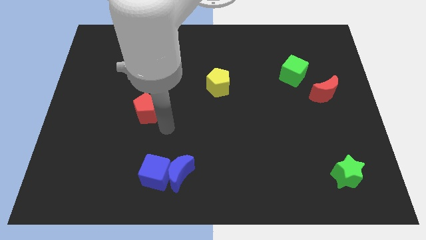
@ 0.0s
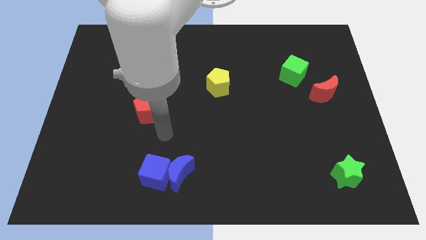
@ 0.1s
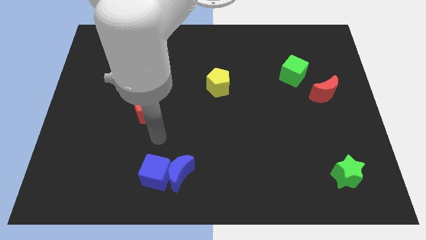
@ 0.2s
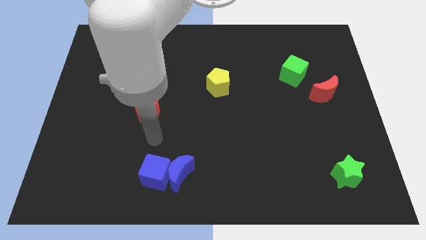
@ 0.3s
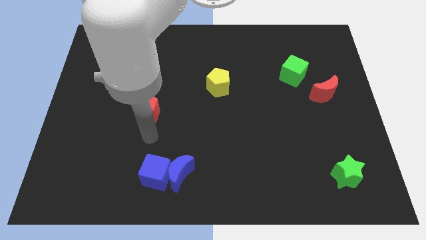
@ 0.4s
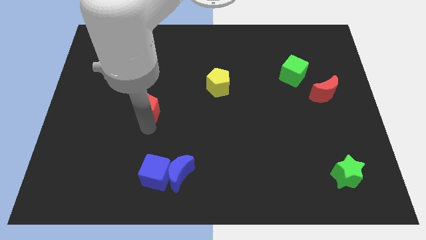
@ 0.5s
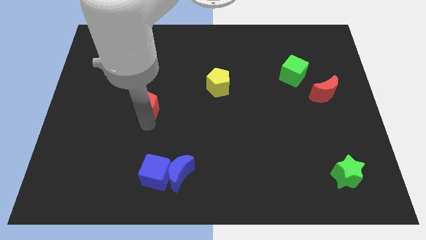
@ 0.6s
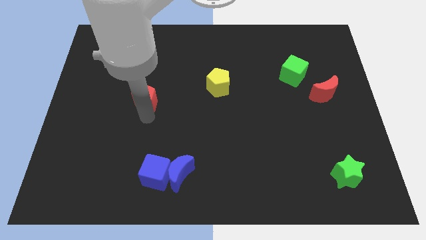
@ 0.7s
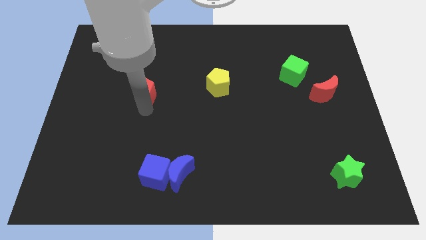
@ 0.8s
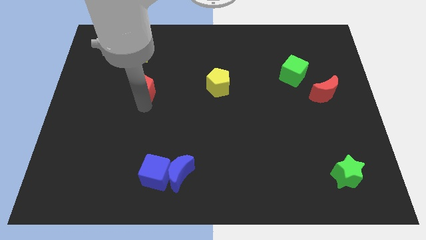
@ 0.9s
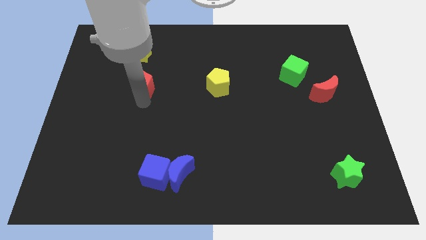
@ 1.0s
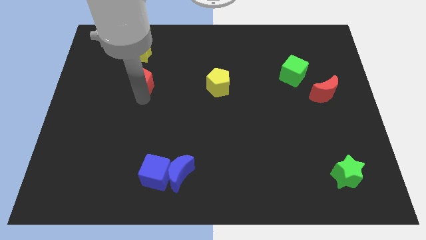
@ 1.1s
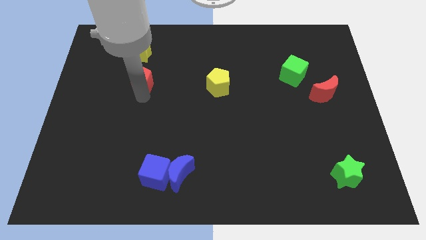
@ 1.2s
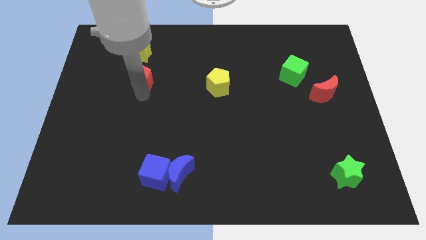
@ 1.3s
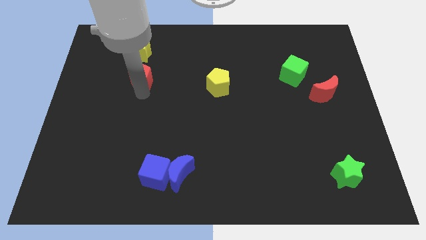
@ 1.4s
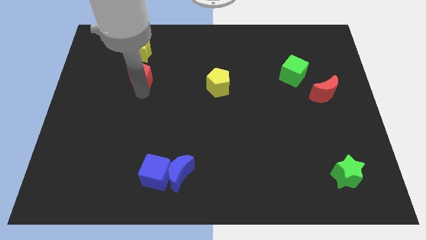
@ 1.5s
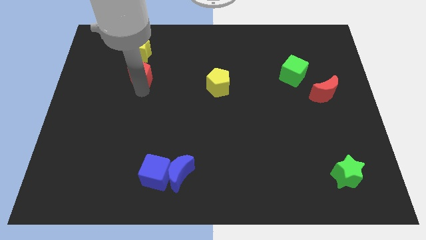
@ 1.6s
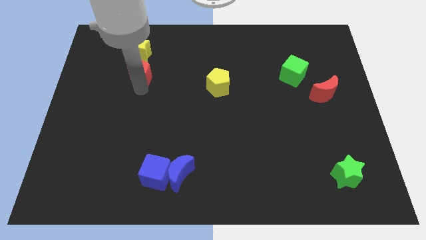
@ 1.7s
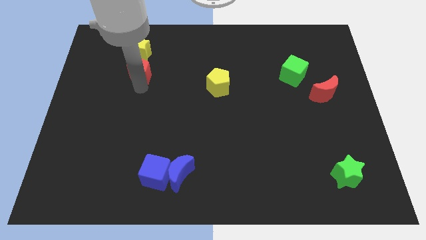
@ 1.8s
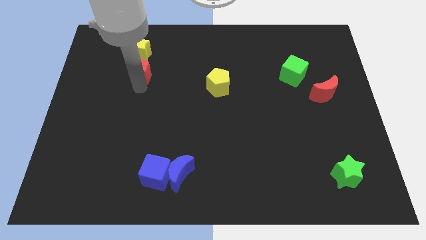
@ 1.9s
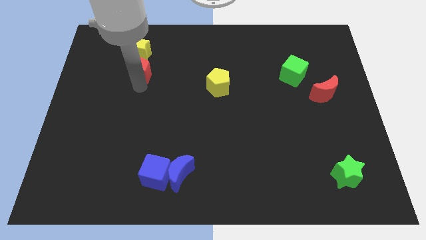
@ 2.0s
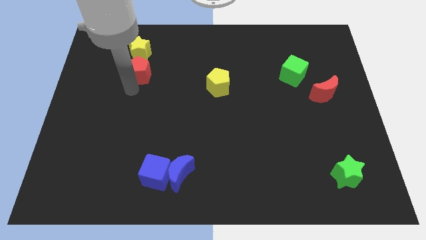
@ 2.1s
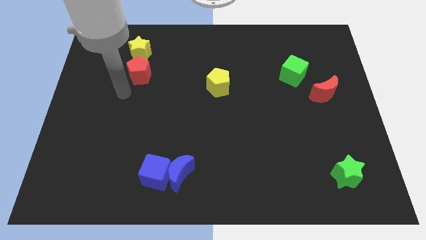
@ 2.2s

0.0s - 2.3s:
move the red pentagon below the yellow star

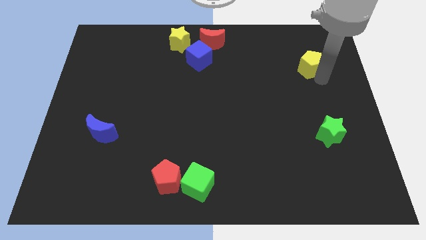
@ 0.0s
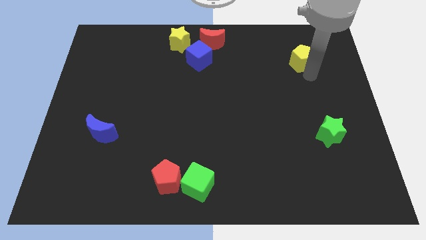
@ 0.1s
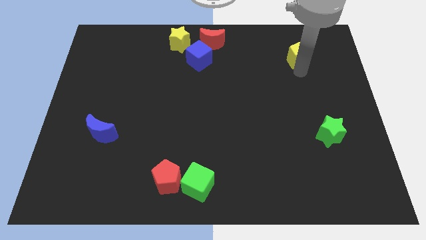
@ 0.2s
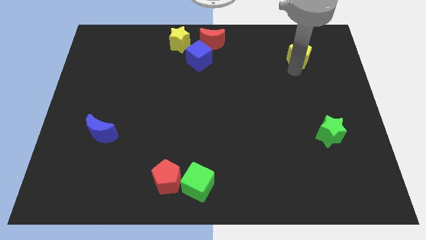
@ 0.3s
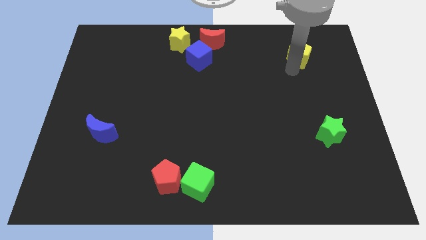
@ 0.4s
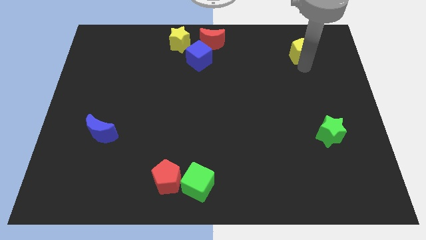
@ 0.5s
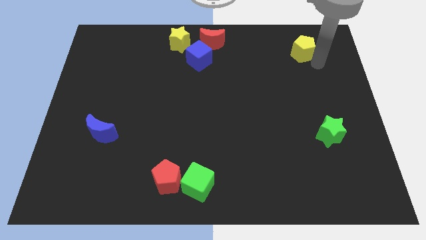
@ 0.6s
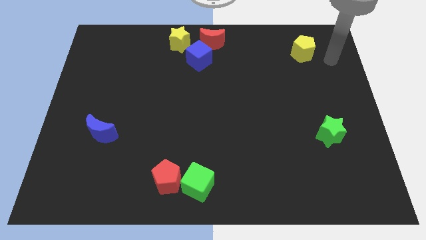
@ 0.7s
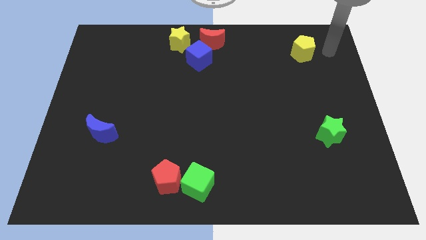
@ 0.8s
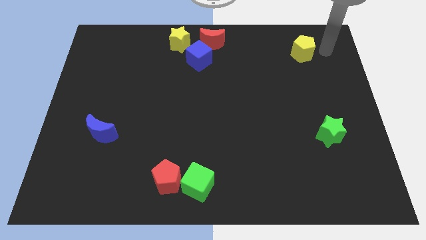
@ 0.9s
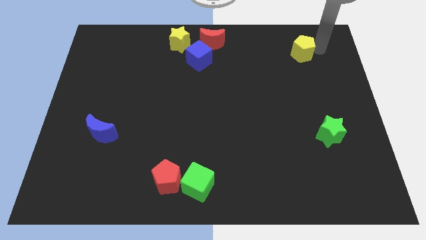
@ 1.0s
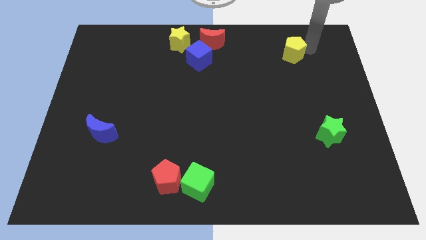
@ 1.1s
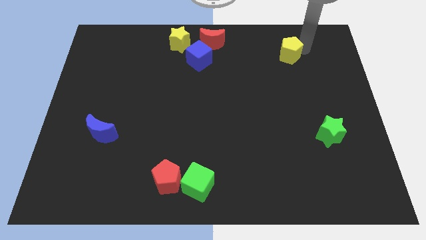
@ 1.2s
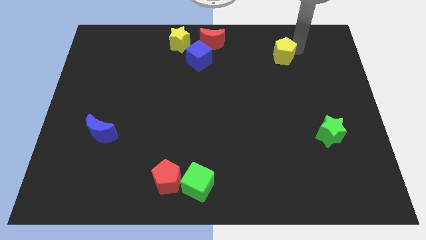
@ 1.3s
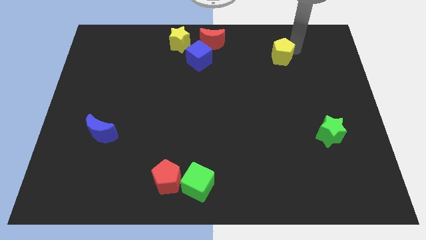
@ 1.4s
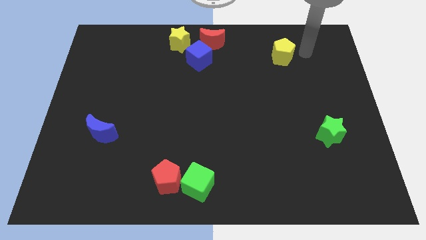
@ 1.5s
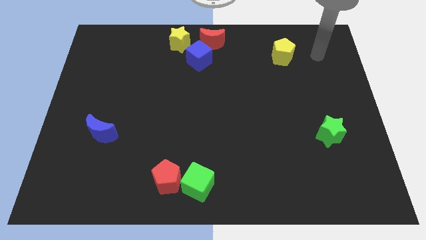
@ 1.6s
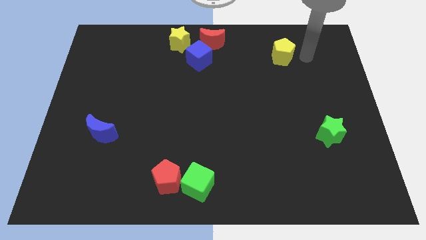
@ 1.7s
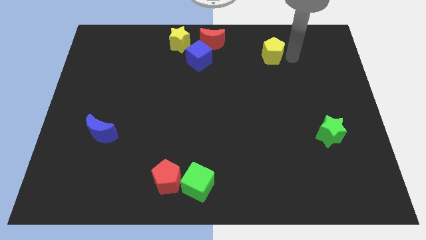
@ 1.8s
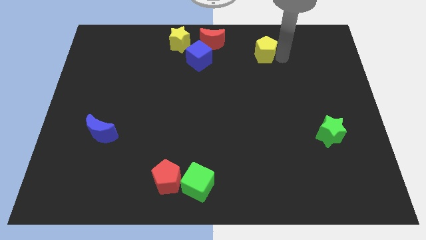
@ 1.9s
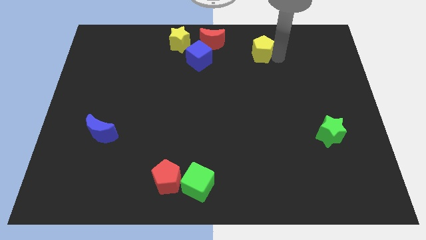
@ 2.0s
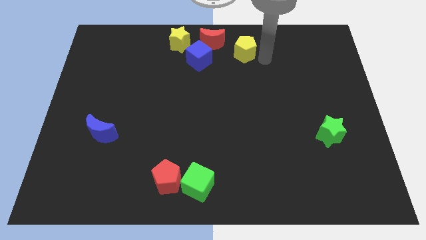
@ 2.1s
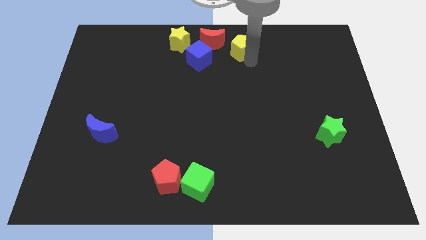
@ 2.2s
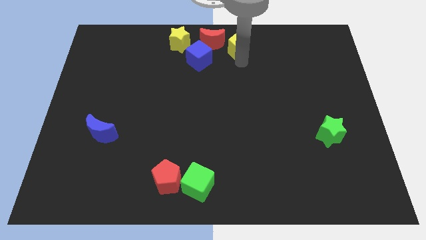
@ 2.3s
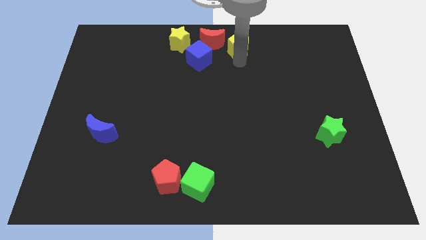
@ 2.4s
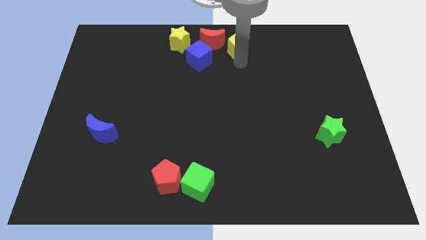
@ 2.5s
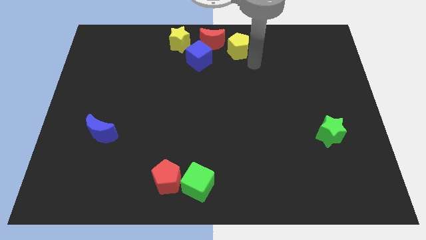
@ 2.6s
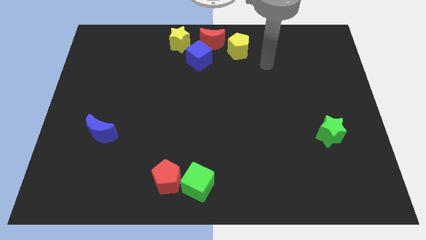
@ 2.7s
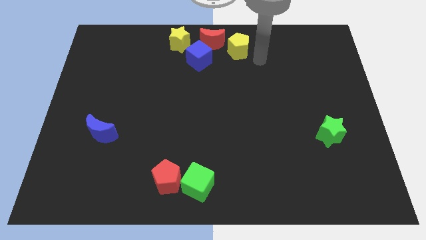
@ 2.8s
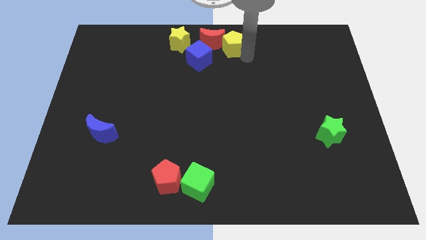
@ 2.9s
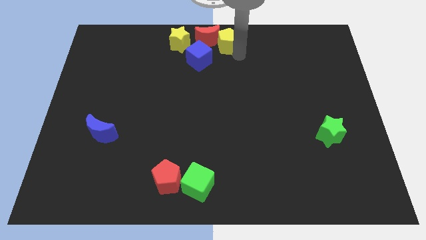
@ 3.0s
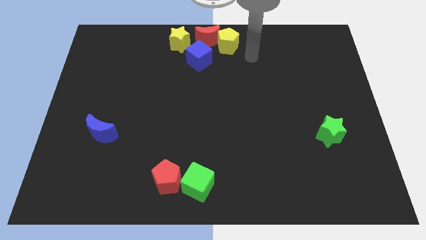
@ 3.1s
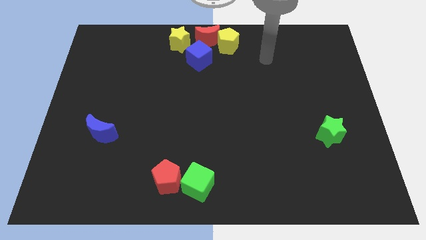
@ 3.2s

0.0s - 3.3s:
push yellow pentagon in to red moon

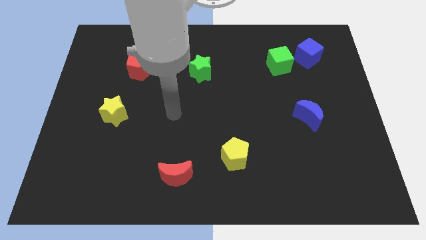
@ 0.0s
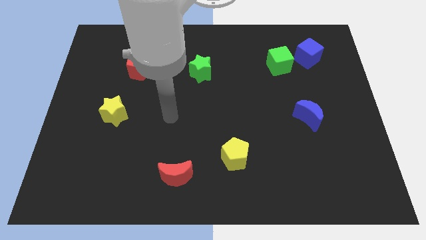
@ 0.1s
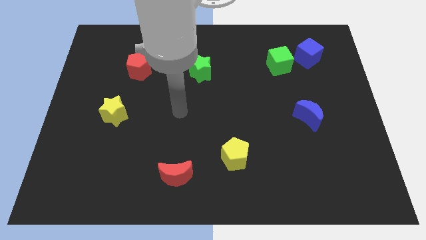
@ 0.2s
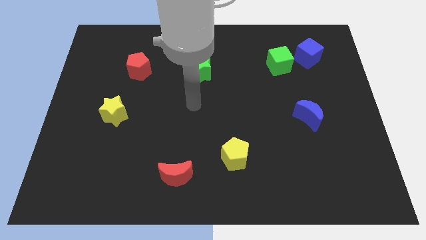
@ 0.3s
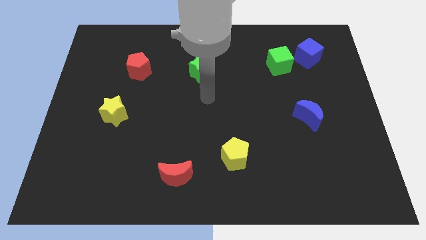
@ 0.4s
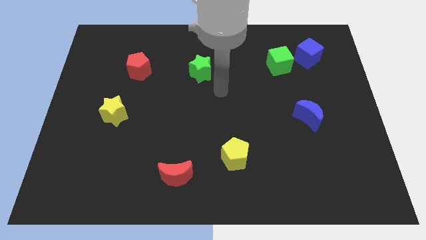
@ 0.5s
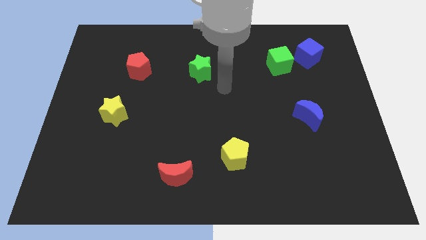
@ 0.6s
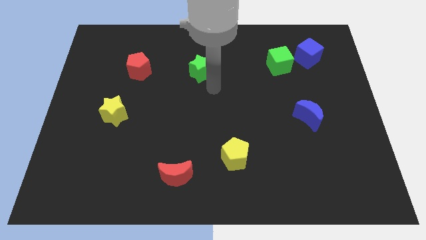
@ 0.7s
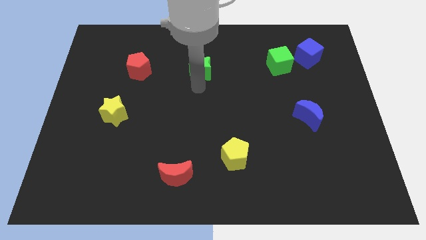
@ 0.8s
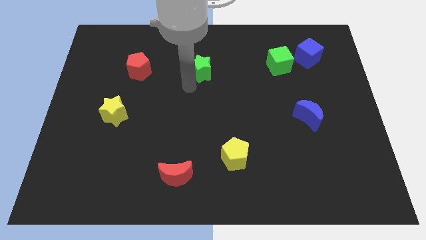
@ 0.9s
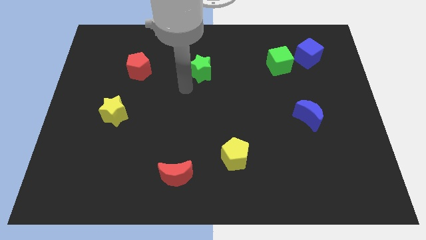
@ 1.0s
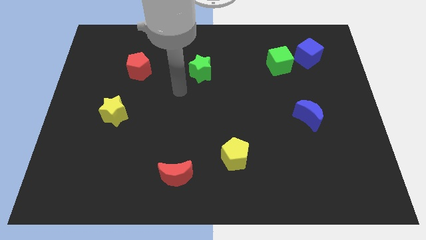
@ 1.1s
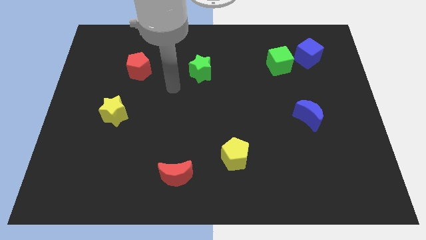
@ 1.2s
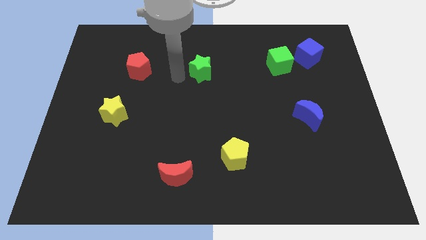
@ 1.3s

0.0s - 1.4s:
move the arm left side of the green star

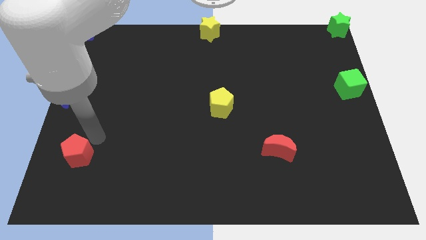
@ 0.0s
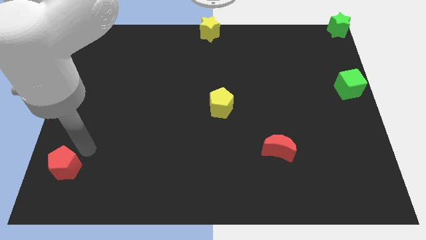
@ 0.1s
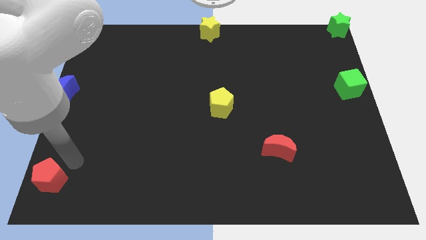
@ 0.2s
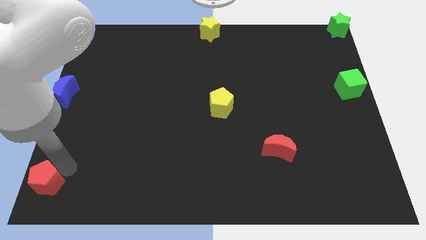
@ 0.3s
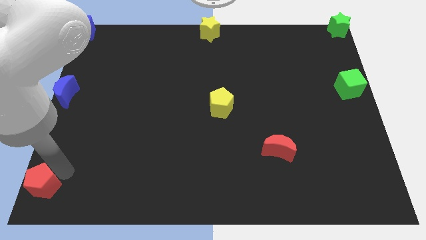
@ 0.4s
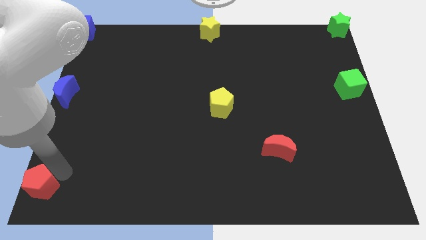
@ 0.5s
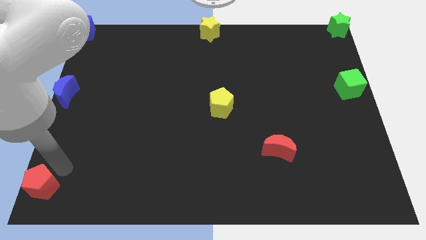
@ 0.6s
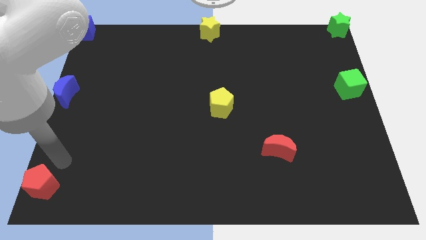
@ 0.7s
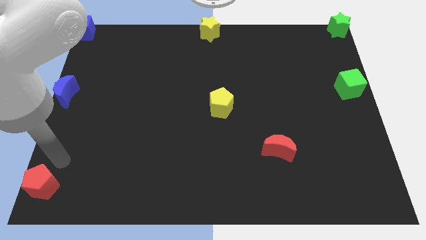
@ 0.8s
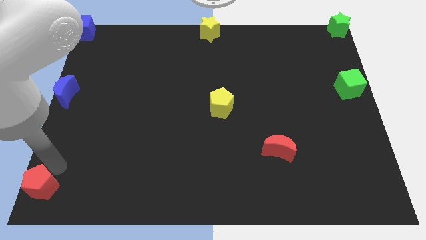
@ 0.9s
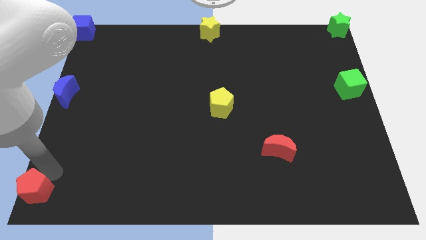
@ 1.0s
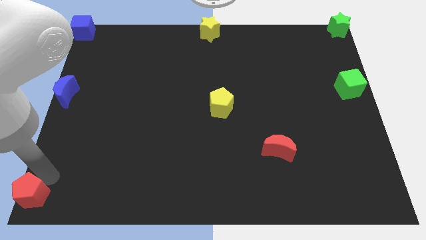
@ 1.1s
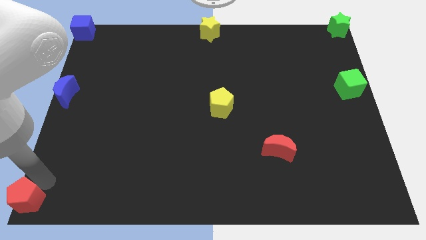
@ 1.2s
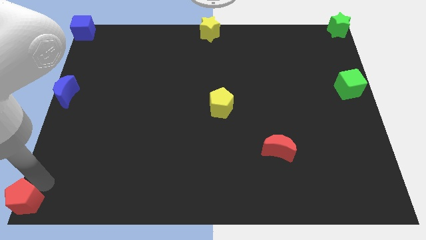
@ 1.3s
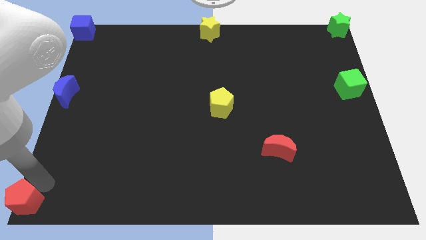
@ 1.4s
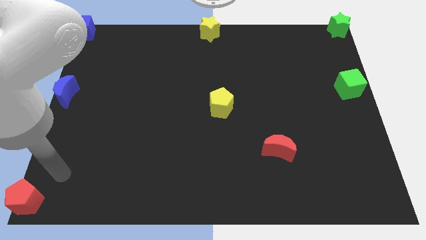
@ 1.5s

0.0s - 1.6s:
move the red pentagon to the bottom left of the board
